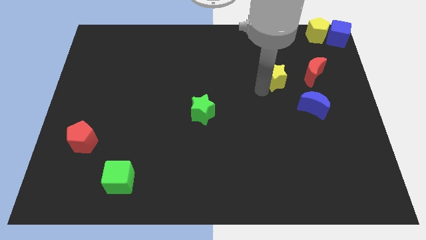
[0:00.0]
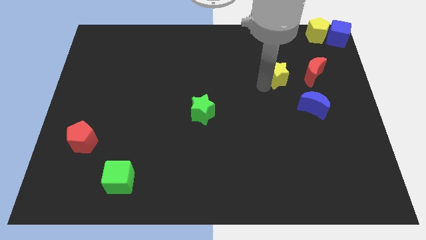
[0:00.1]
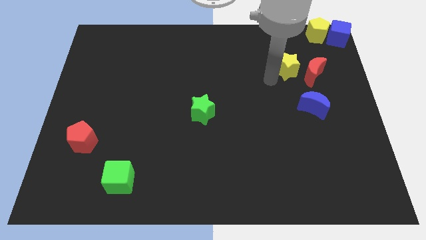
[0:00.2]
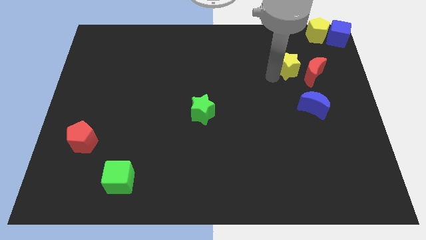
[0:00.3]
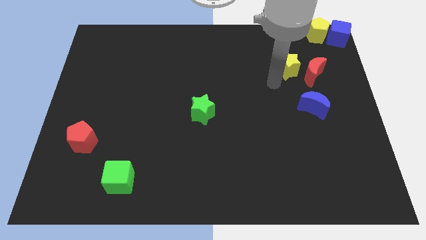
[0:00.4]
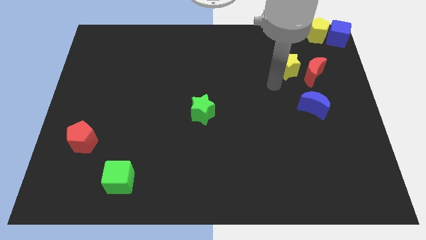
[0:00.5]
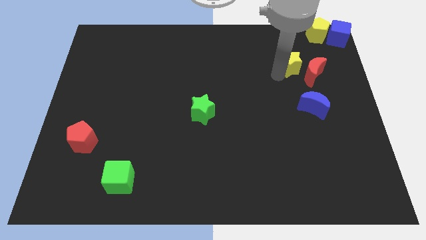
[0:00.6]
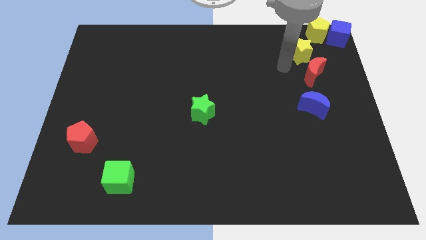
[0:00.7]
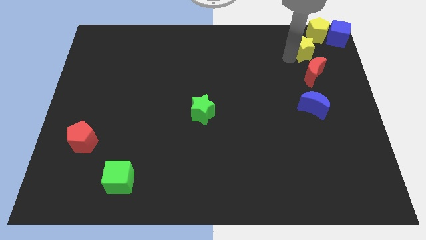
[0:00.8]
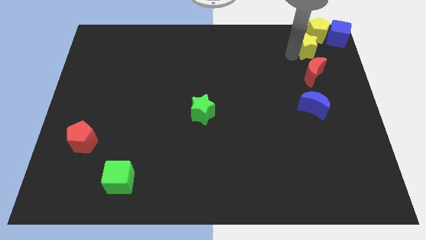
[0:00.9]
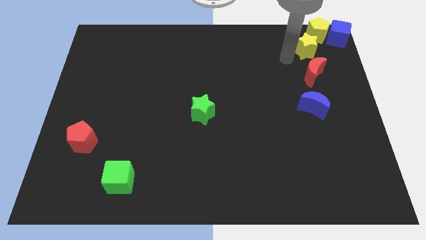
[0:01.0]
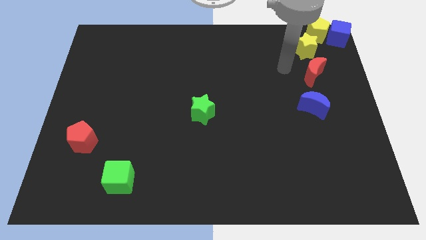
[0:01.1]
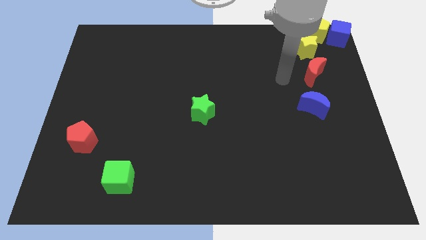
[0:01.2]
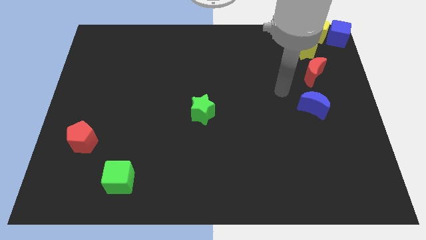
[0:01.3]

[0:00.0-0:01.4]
drag the yellow star towards the yellow pentagon

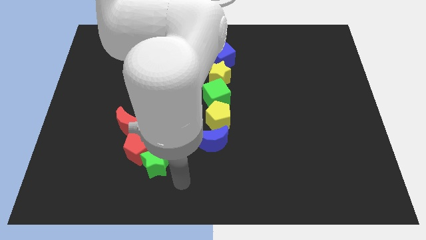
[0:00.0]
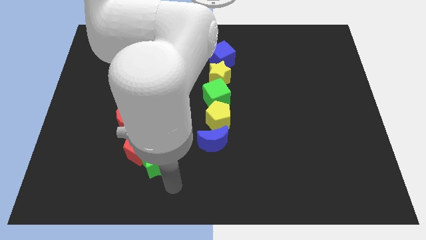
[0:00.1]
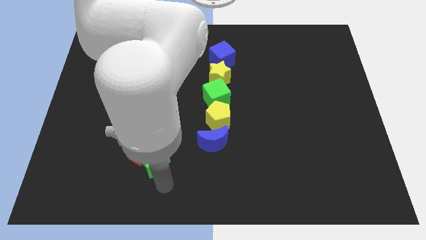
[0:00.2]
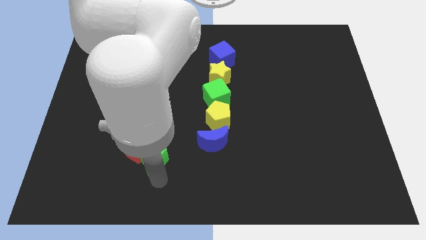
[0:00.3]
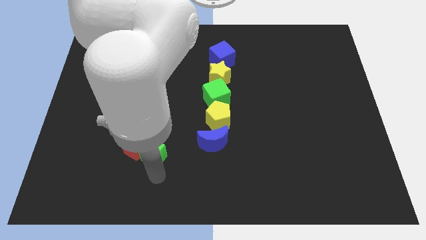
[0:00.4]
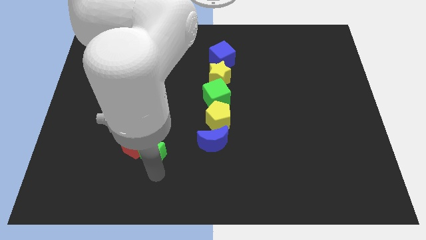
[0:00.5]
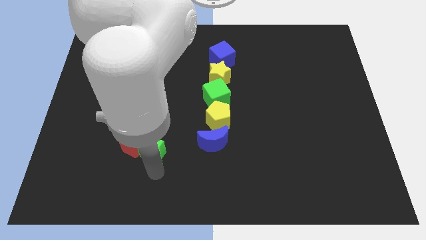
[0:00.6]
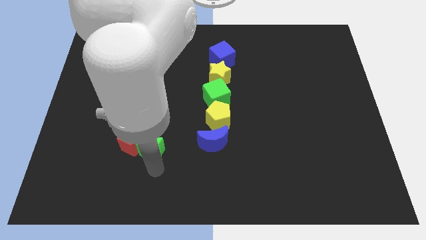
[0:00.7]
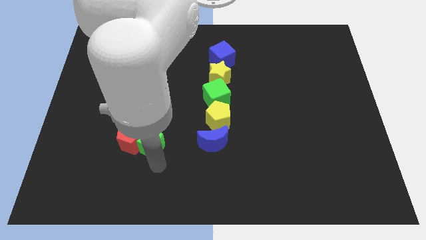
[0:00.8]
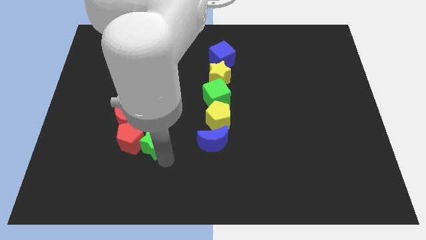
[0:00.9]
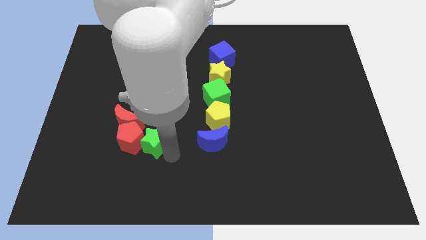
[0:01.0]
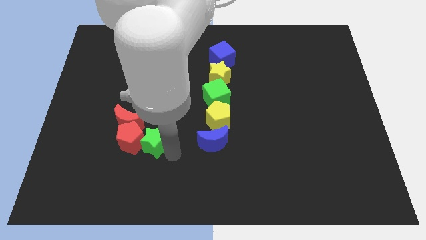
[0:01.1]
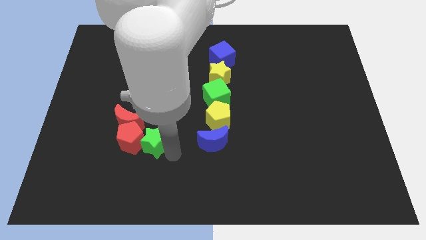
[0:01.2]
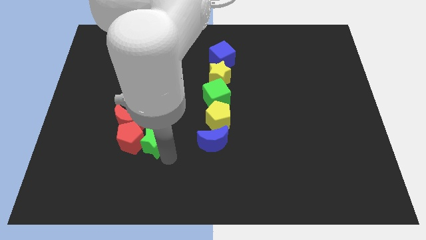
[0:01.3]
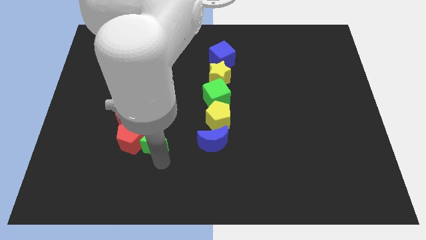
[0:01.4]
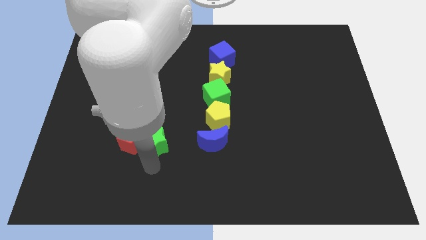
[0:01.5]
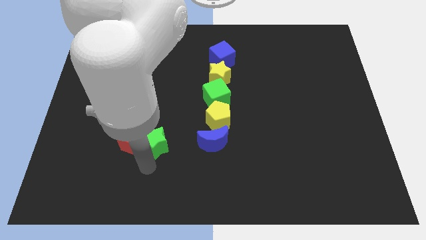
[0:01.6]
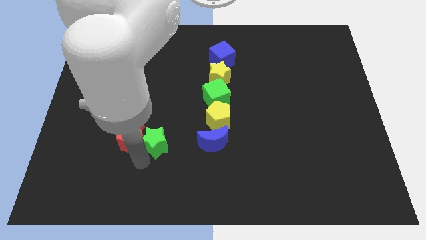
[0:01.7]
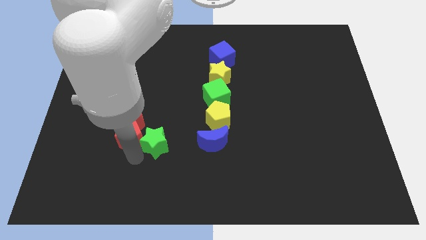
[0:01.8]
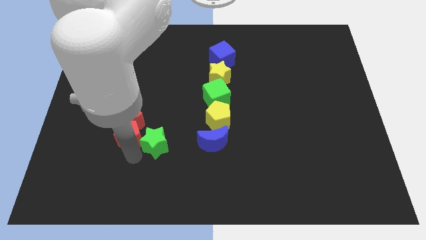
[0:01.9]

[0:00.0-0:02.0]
place the green star in between red pentagon and blue crescent

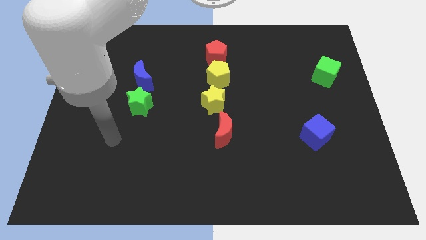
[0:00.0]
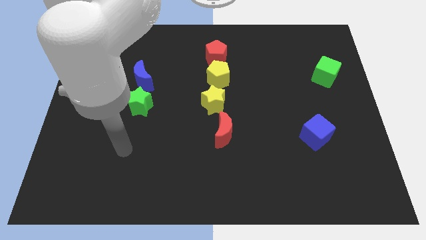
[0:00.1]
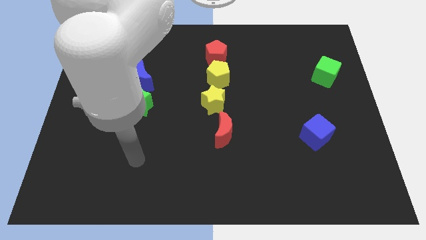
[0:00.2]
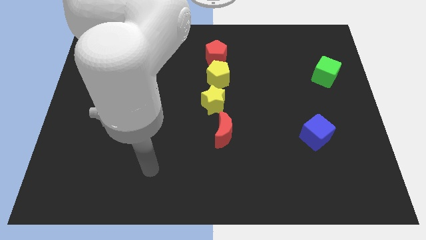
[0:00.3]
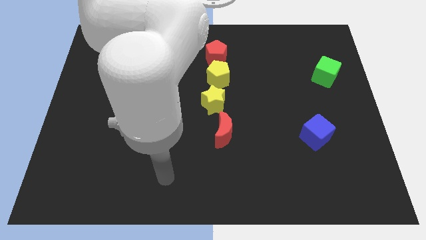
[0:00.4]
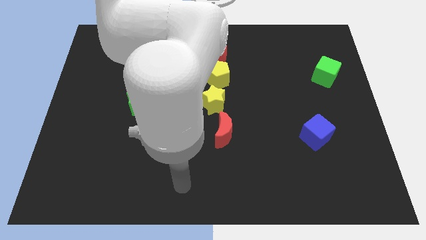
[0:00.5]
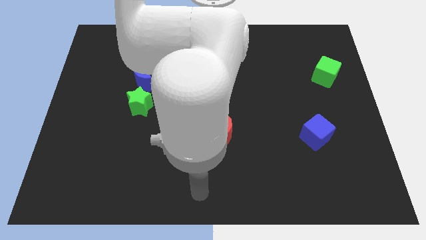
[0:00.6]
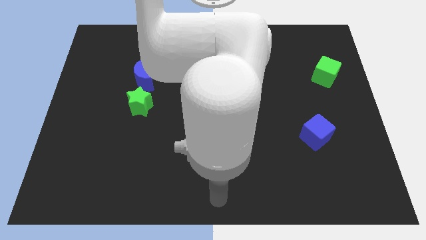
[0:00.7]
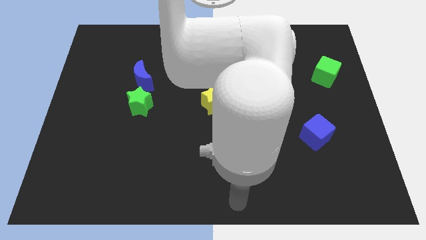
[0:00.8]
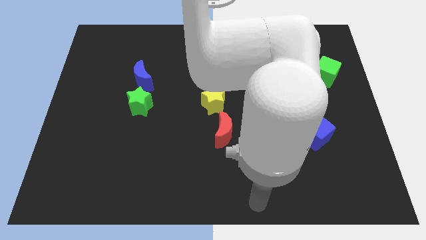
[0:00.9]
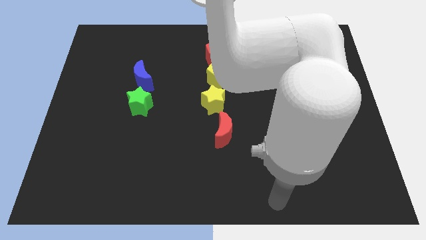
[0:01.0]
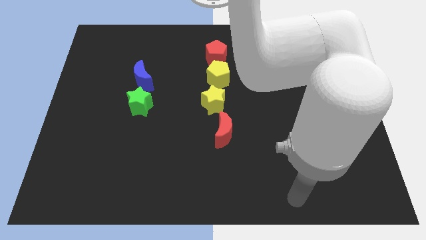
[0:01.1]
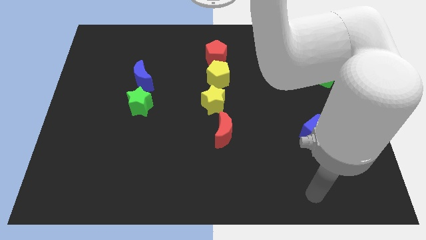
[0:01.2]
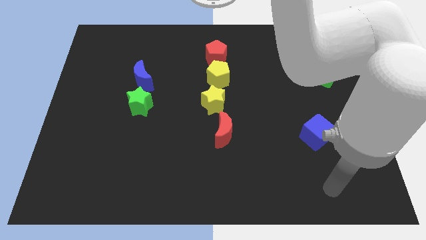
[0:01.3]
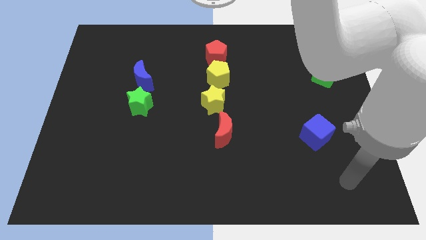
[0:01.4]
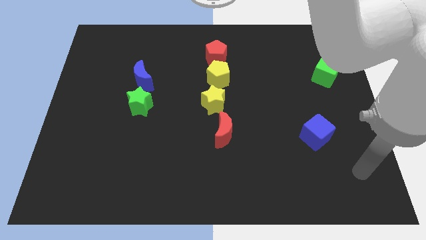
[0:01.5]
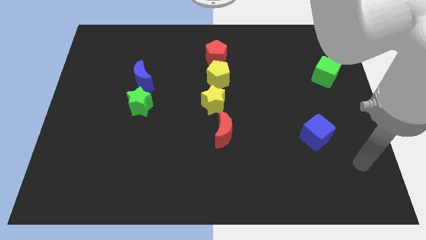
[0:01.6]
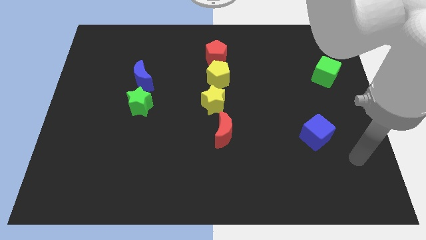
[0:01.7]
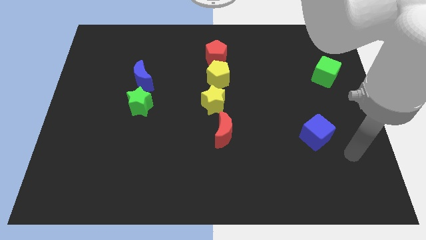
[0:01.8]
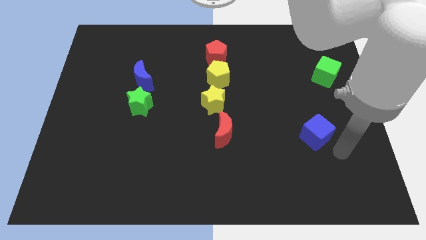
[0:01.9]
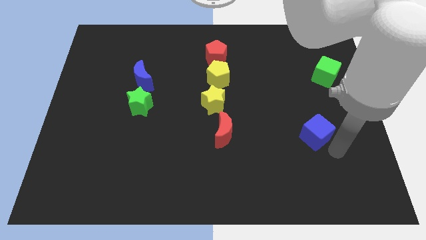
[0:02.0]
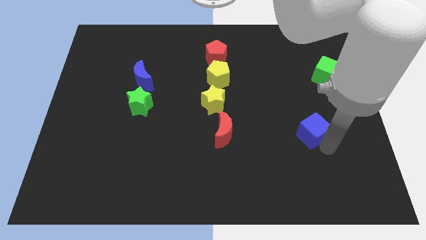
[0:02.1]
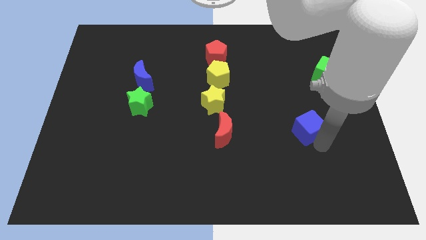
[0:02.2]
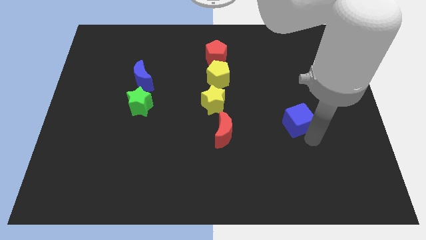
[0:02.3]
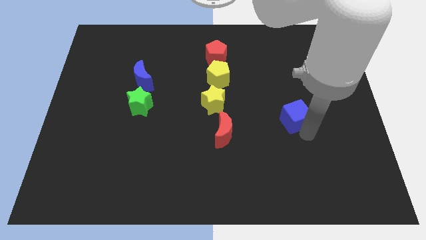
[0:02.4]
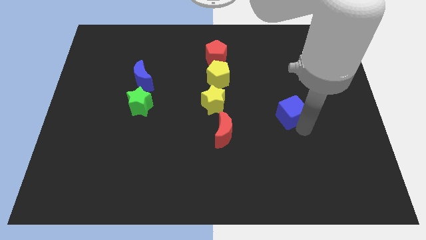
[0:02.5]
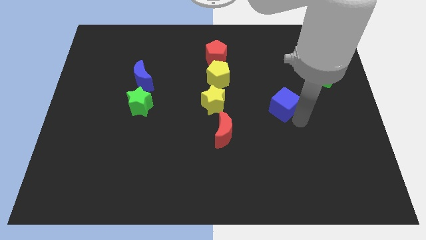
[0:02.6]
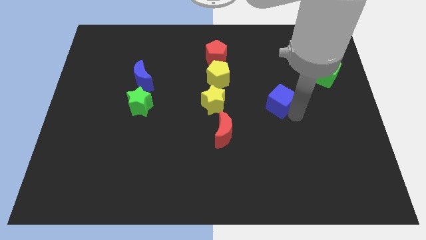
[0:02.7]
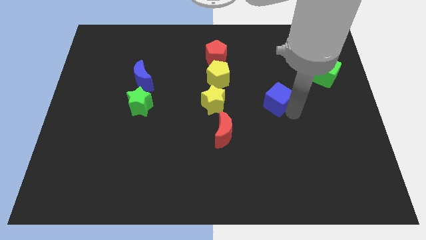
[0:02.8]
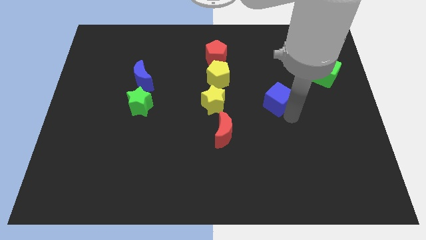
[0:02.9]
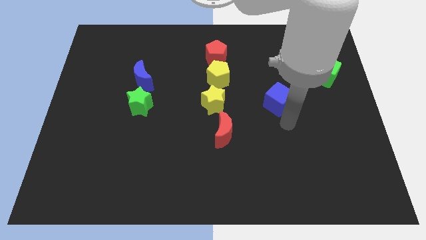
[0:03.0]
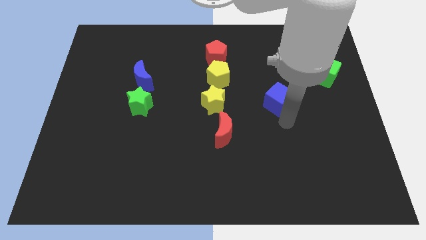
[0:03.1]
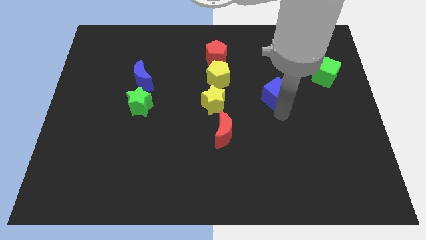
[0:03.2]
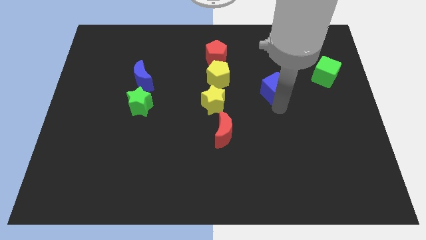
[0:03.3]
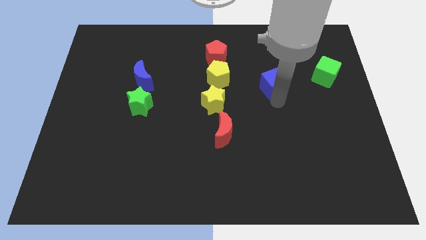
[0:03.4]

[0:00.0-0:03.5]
put the blue cube diagonally in between the green cube and yellow star

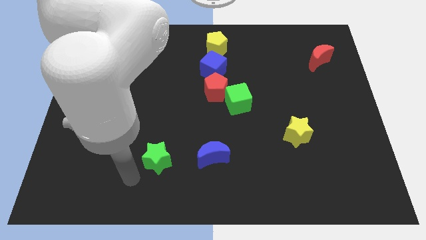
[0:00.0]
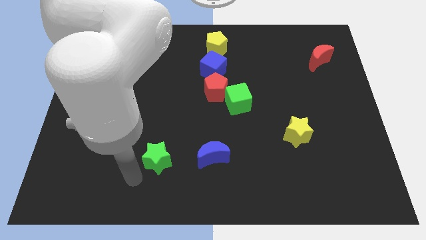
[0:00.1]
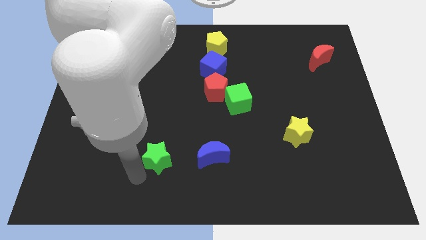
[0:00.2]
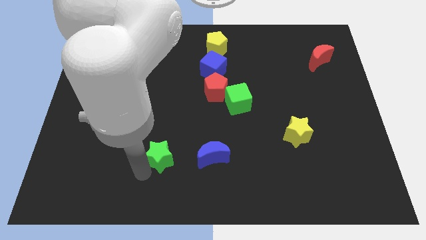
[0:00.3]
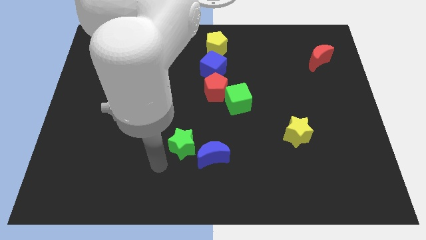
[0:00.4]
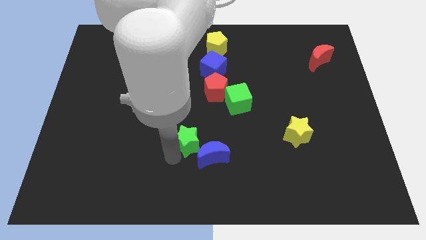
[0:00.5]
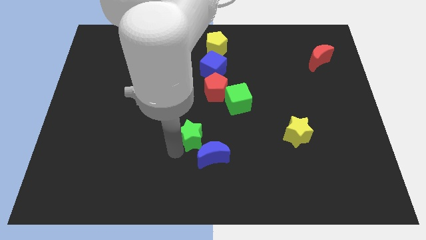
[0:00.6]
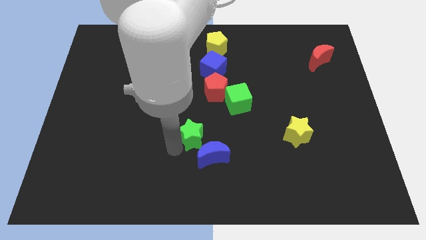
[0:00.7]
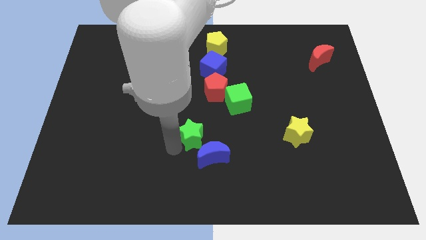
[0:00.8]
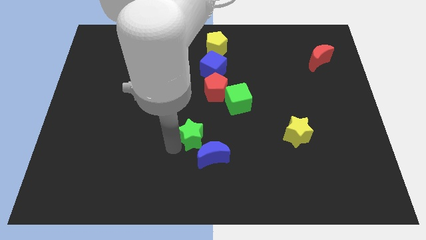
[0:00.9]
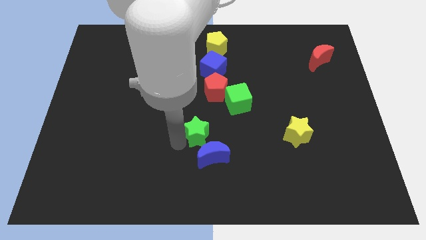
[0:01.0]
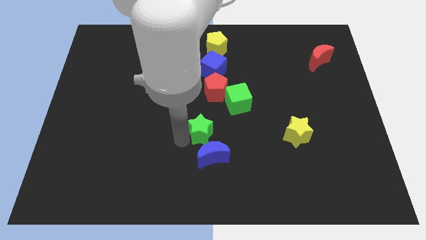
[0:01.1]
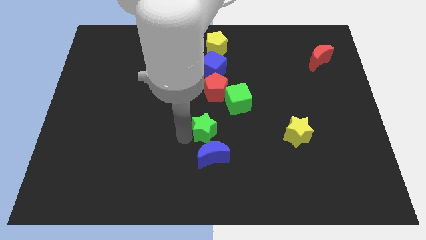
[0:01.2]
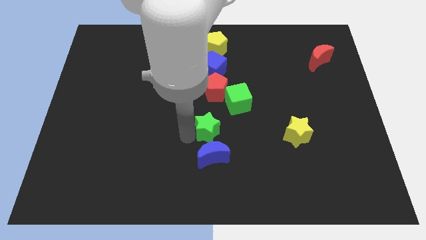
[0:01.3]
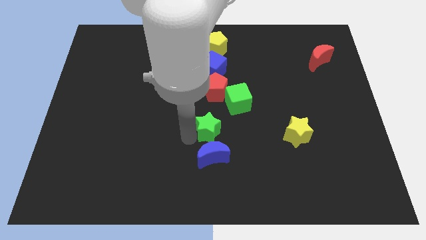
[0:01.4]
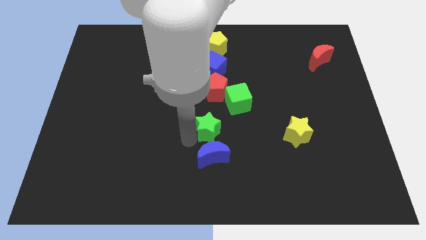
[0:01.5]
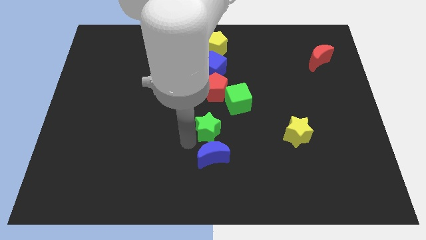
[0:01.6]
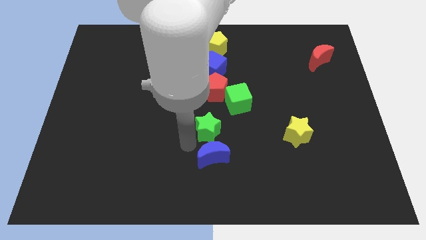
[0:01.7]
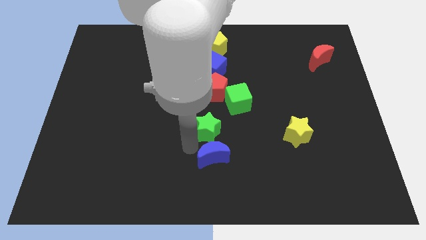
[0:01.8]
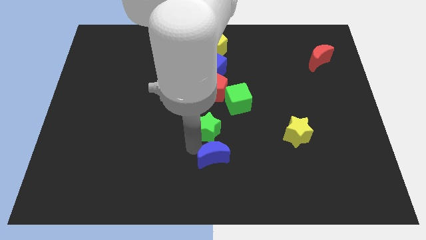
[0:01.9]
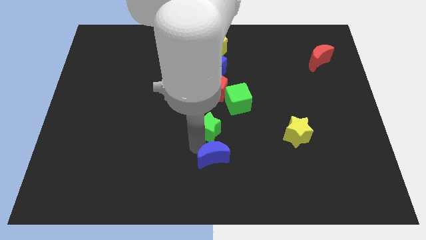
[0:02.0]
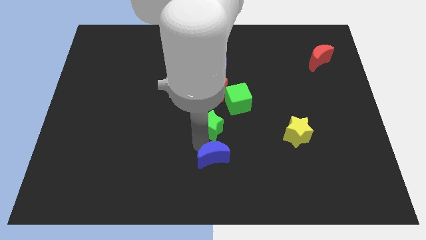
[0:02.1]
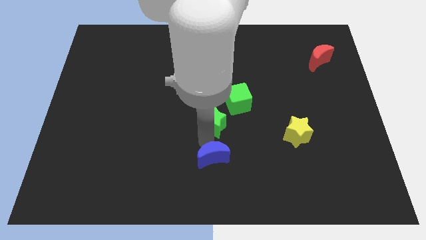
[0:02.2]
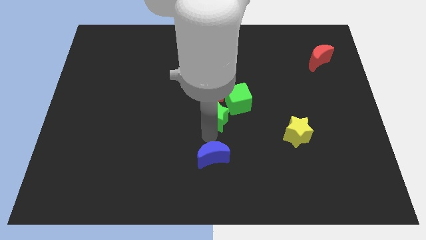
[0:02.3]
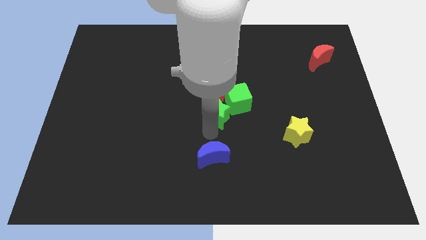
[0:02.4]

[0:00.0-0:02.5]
place the green star above the blue crescent
